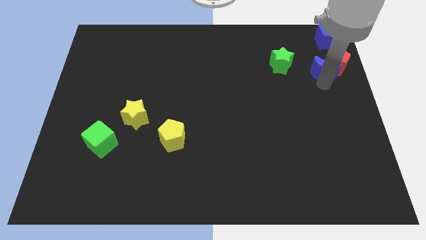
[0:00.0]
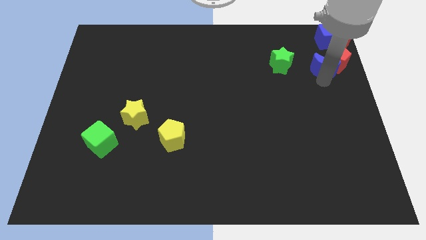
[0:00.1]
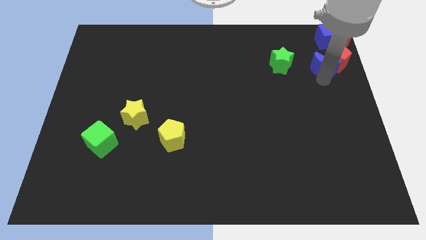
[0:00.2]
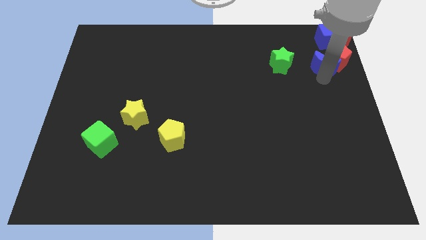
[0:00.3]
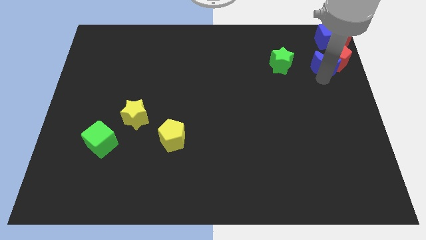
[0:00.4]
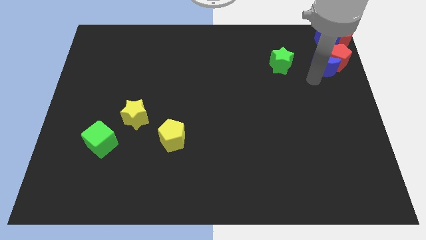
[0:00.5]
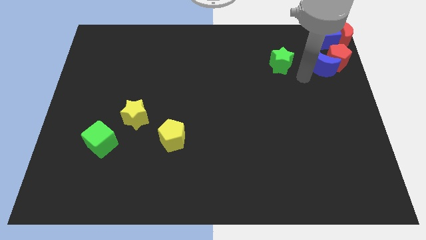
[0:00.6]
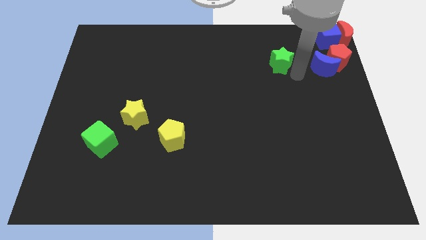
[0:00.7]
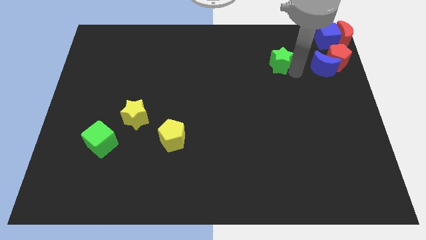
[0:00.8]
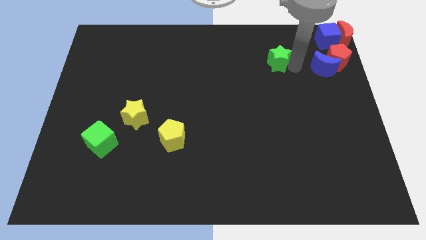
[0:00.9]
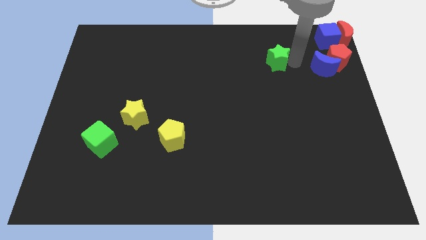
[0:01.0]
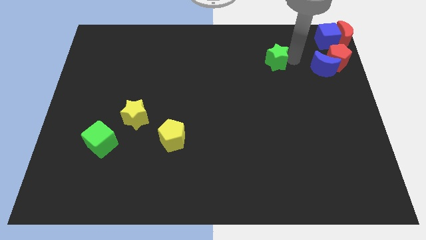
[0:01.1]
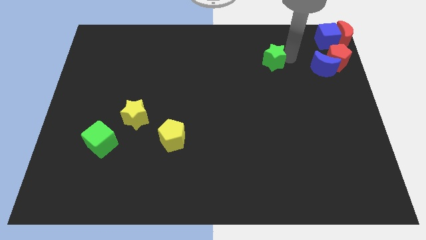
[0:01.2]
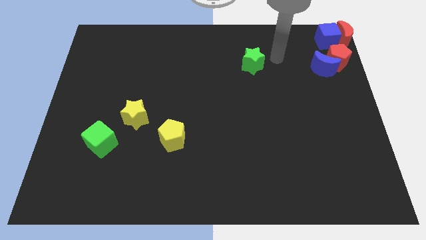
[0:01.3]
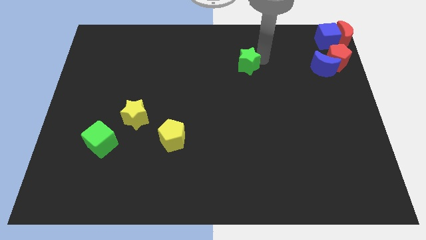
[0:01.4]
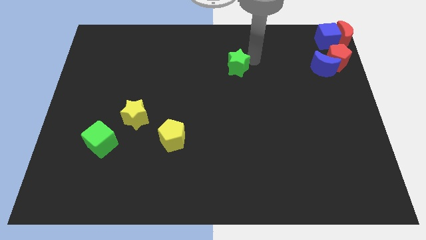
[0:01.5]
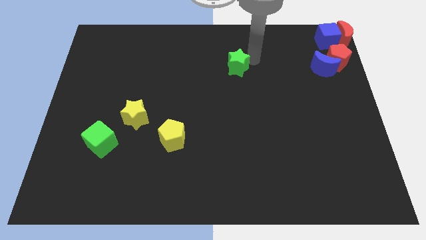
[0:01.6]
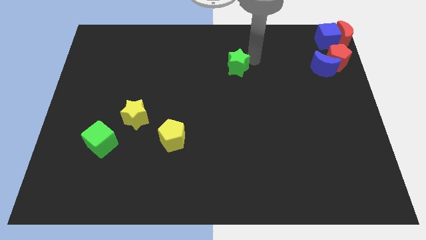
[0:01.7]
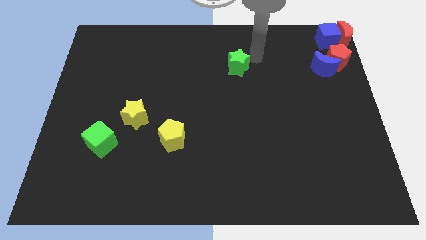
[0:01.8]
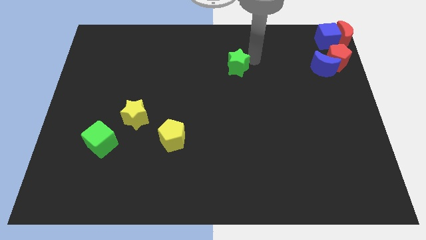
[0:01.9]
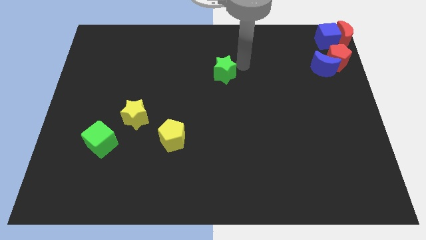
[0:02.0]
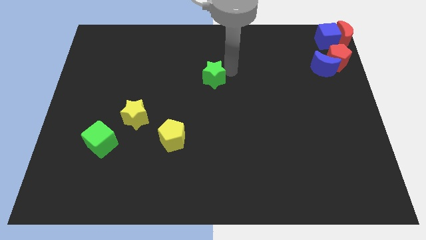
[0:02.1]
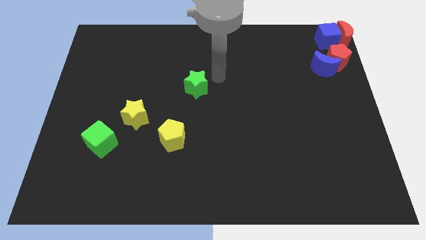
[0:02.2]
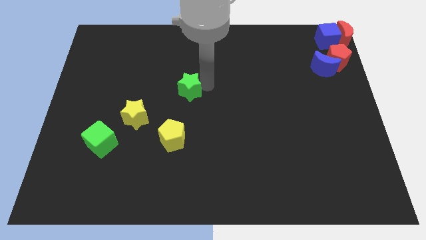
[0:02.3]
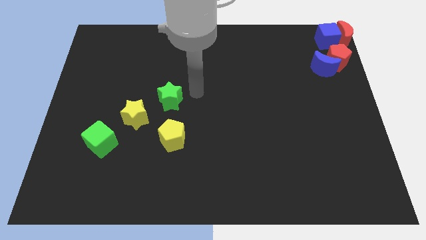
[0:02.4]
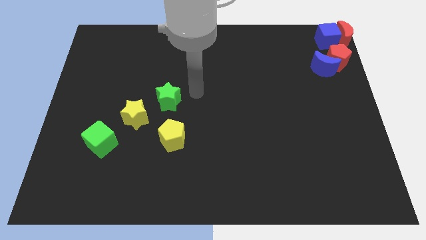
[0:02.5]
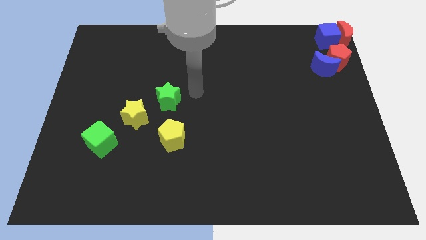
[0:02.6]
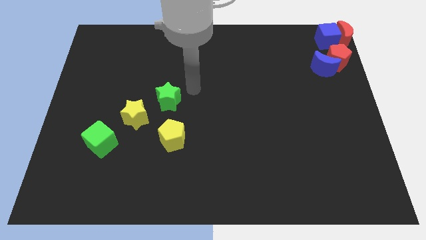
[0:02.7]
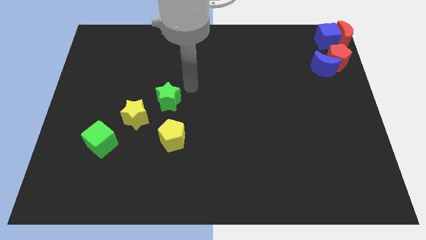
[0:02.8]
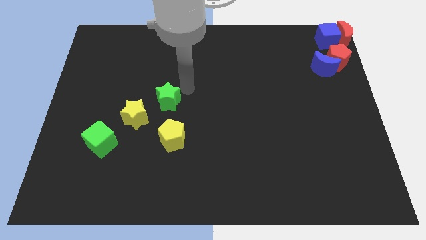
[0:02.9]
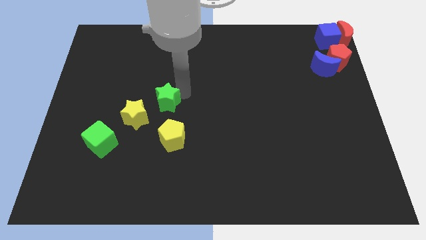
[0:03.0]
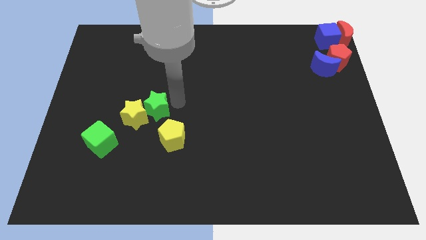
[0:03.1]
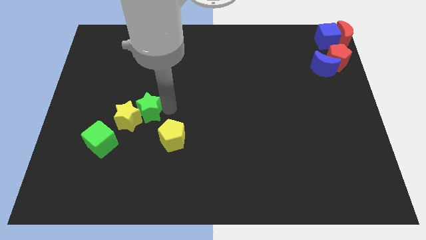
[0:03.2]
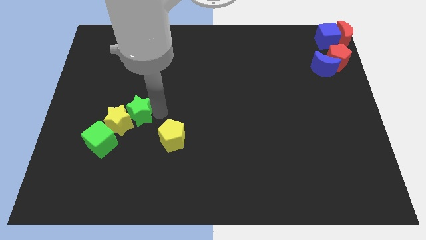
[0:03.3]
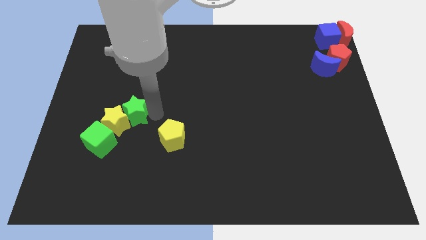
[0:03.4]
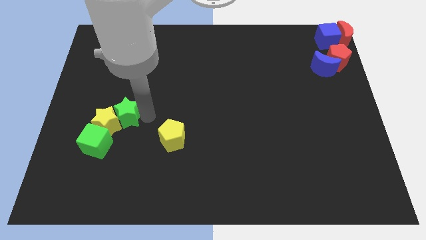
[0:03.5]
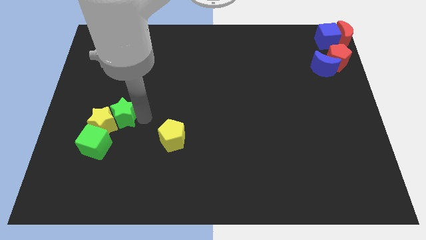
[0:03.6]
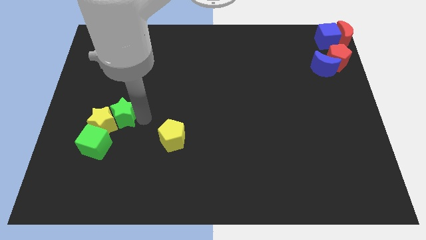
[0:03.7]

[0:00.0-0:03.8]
push the green star into the yellow star

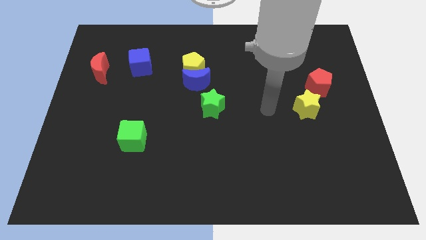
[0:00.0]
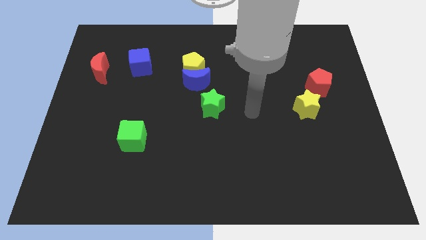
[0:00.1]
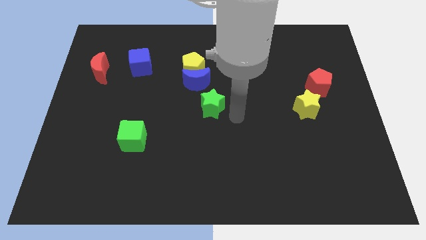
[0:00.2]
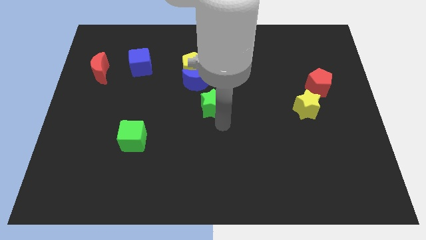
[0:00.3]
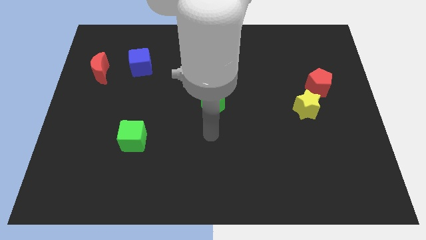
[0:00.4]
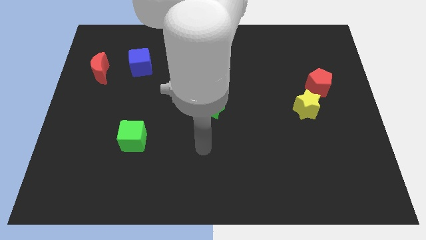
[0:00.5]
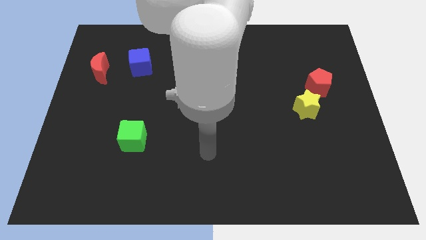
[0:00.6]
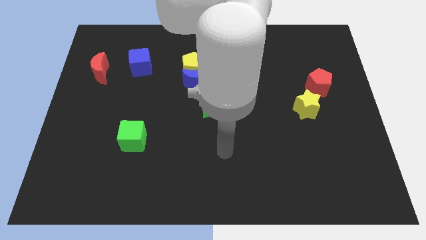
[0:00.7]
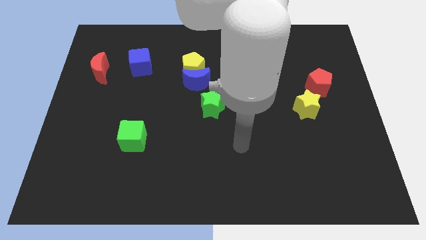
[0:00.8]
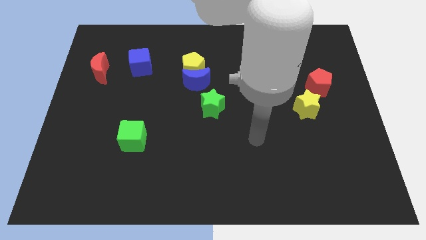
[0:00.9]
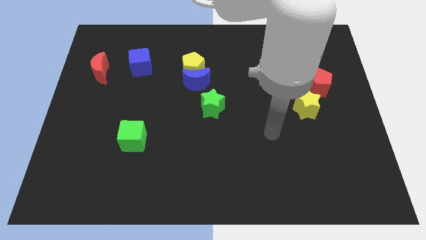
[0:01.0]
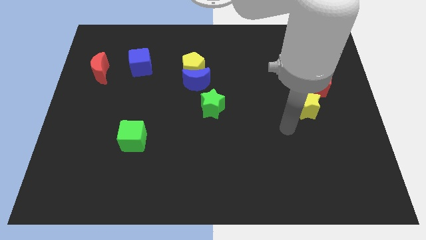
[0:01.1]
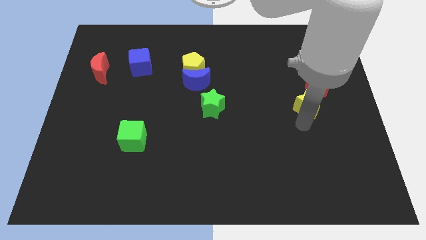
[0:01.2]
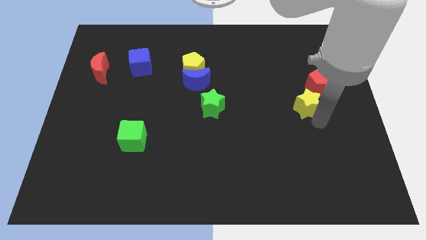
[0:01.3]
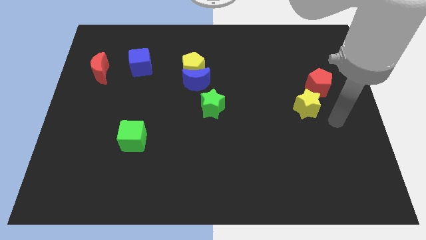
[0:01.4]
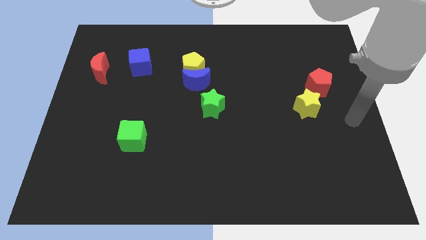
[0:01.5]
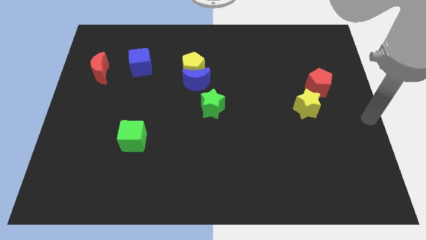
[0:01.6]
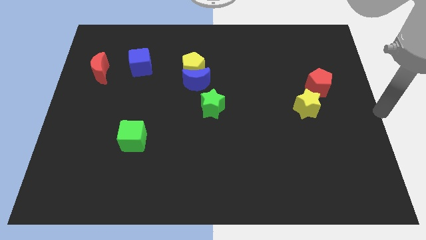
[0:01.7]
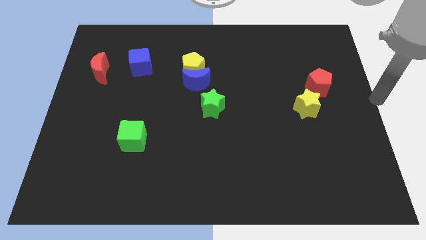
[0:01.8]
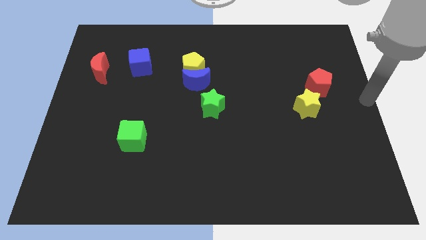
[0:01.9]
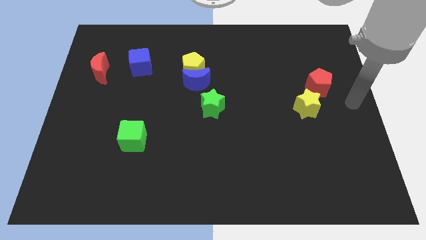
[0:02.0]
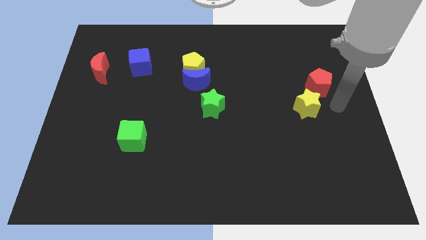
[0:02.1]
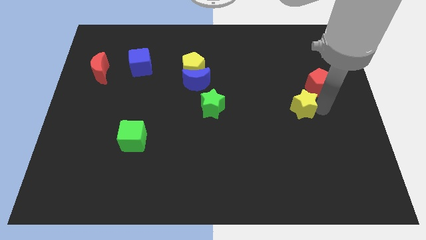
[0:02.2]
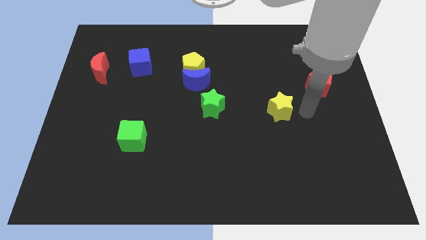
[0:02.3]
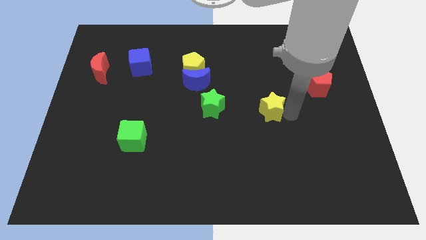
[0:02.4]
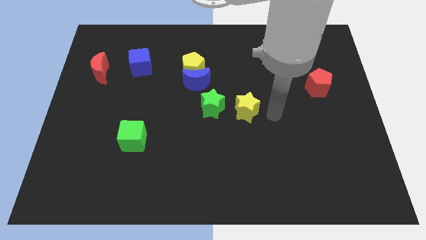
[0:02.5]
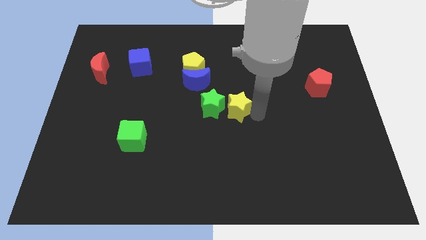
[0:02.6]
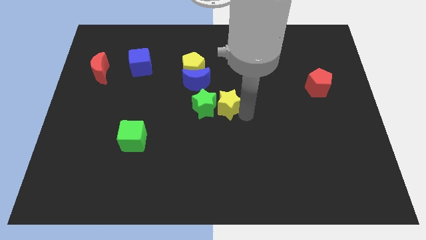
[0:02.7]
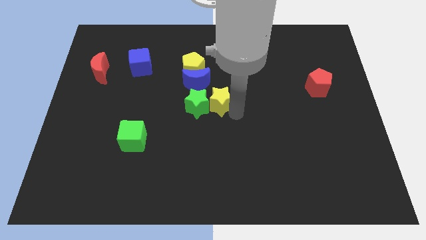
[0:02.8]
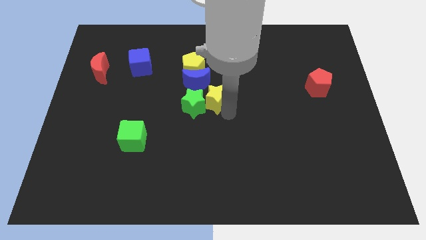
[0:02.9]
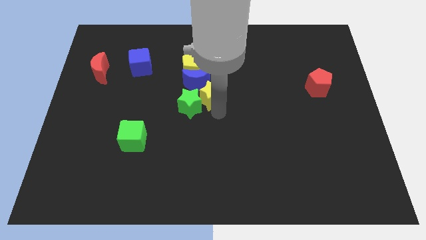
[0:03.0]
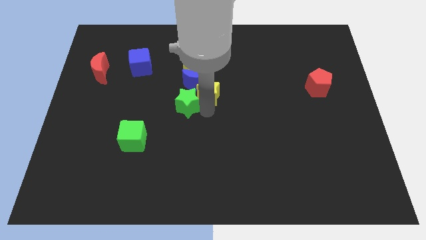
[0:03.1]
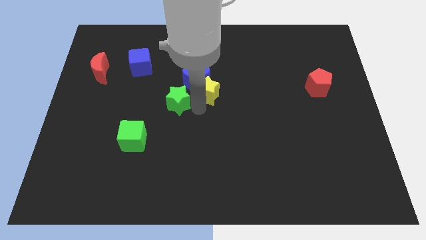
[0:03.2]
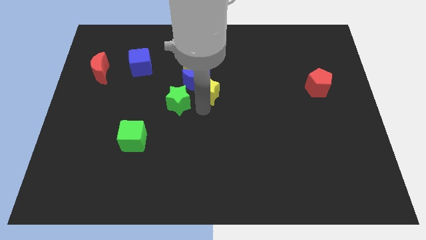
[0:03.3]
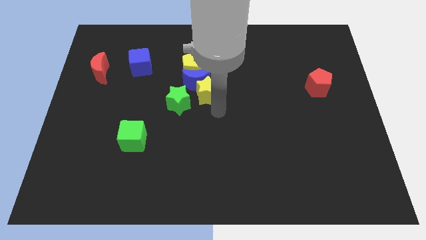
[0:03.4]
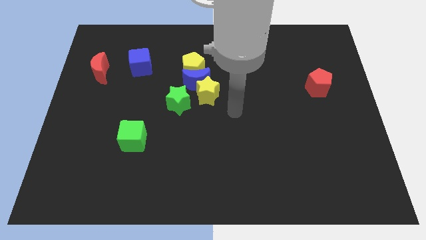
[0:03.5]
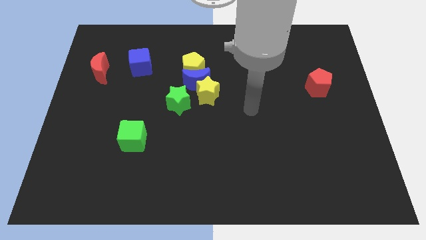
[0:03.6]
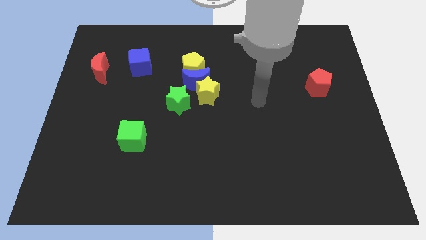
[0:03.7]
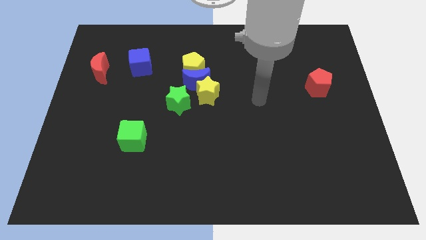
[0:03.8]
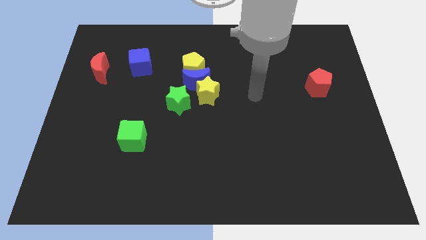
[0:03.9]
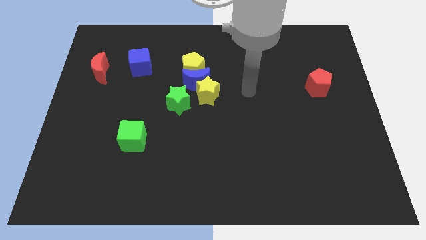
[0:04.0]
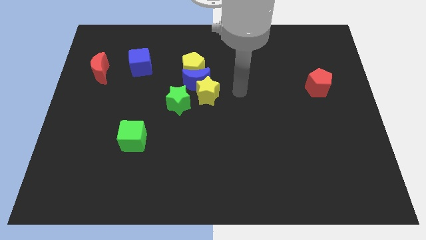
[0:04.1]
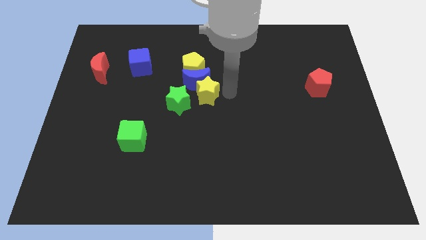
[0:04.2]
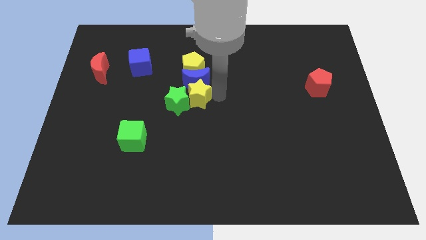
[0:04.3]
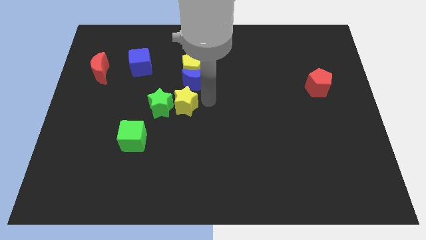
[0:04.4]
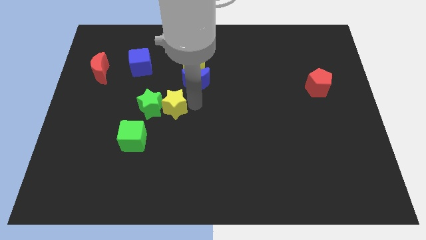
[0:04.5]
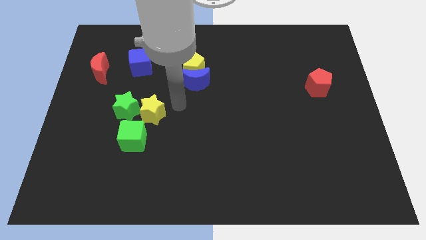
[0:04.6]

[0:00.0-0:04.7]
move the yellow star and green star above the green cube

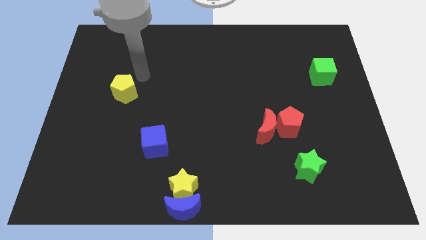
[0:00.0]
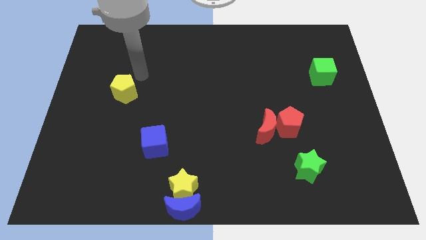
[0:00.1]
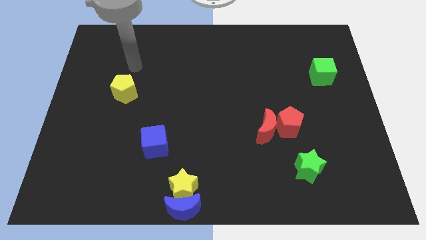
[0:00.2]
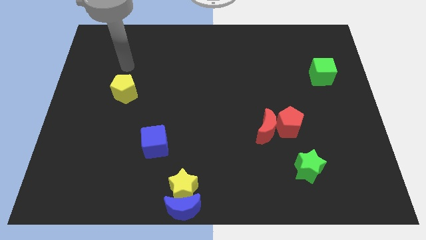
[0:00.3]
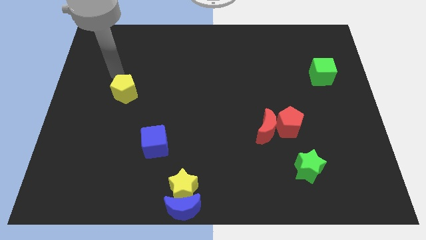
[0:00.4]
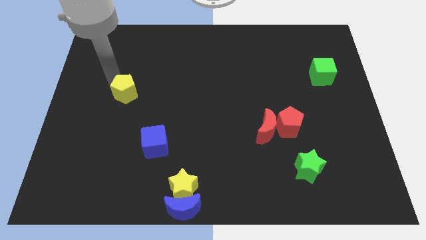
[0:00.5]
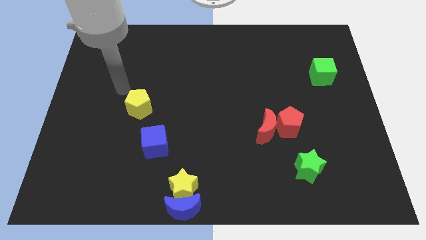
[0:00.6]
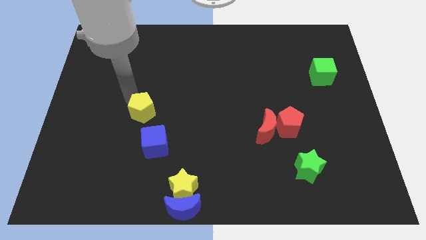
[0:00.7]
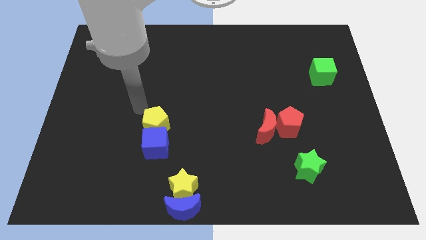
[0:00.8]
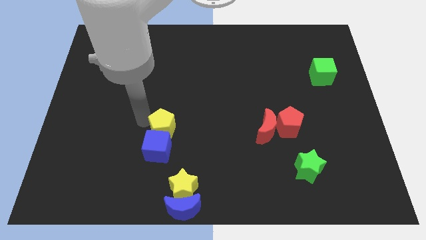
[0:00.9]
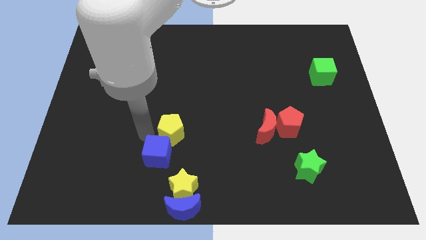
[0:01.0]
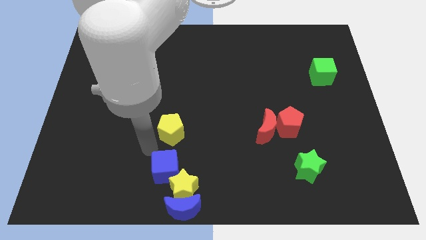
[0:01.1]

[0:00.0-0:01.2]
place the yellow pentagon above the blue cube
